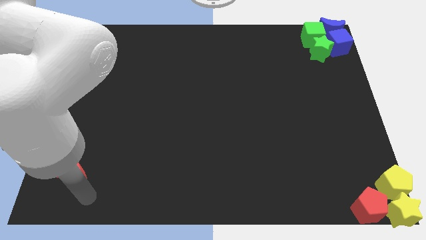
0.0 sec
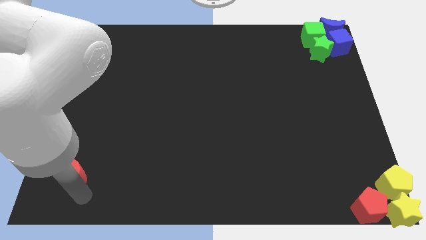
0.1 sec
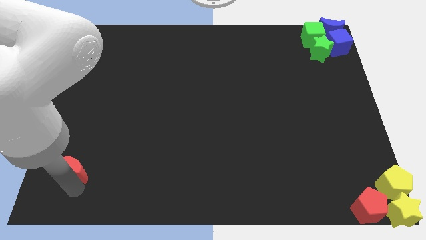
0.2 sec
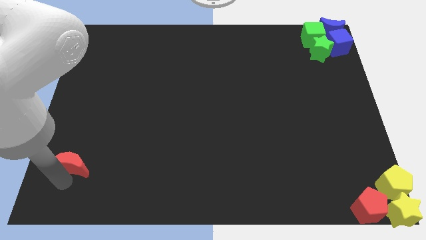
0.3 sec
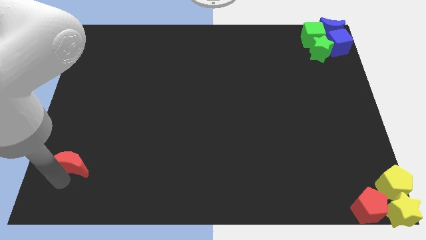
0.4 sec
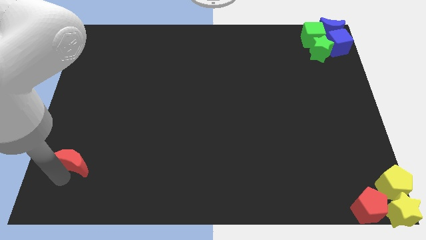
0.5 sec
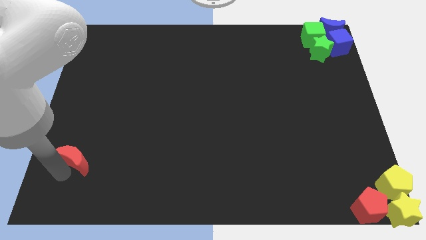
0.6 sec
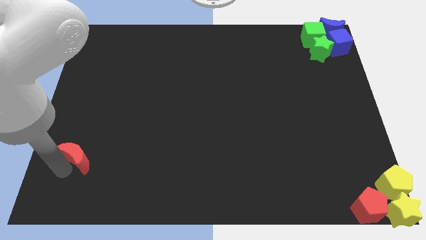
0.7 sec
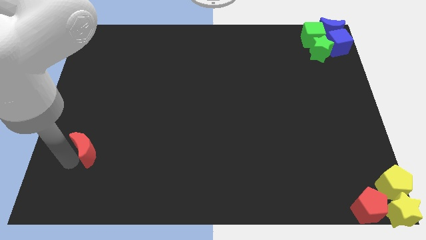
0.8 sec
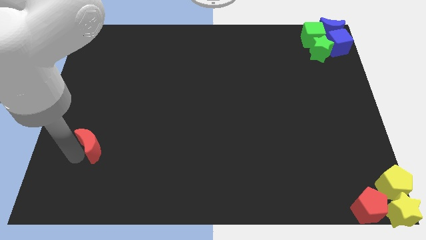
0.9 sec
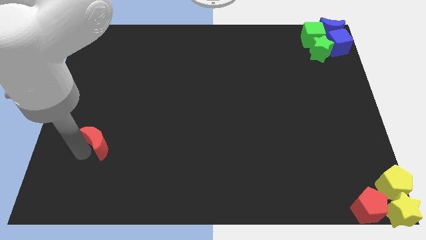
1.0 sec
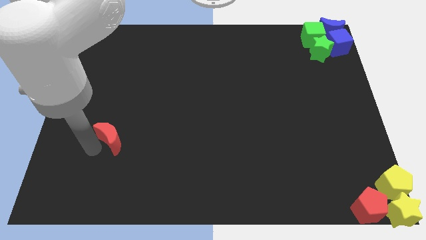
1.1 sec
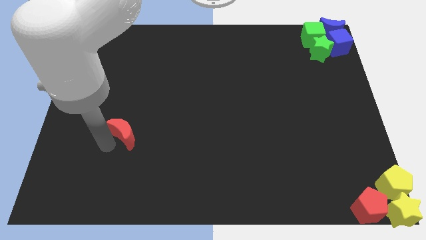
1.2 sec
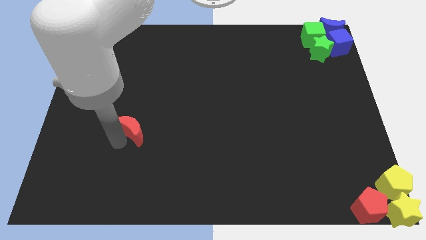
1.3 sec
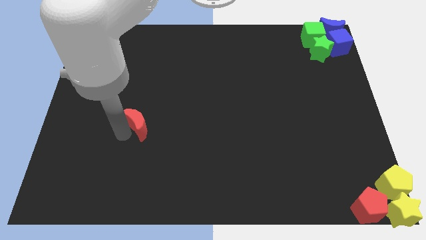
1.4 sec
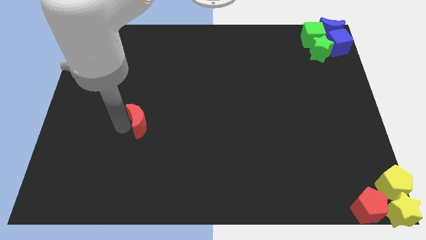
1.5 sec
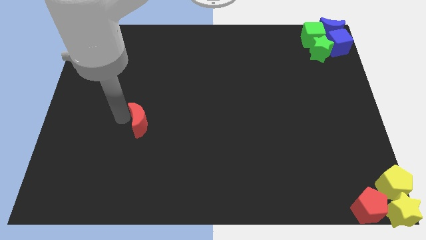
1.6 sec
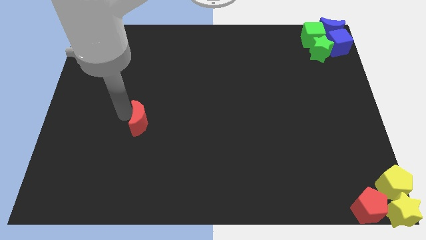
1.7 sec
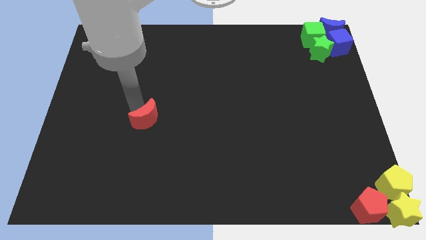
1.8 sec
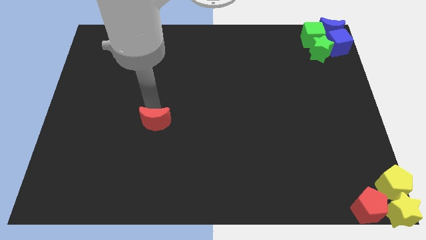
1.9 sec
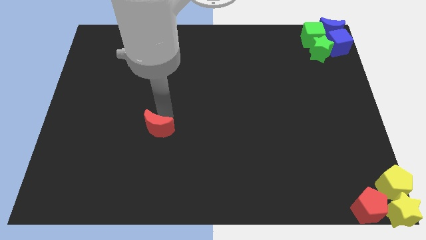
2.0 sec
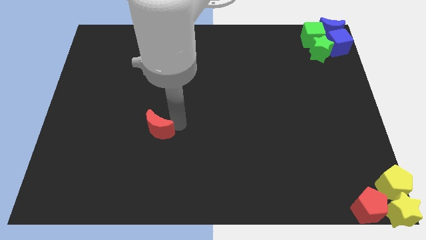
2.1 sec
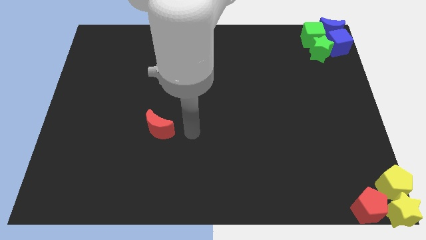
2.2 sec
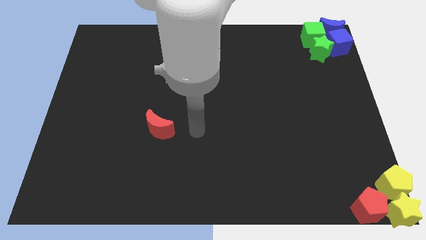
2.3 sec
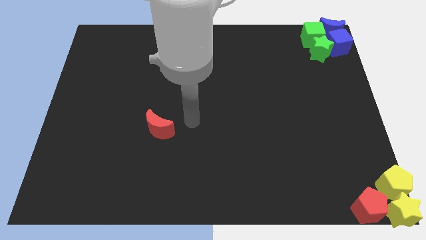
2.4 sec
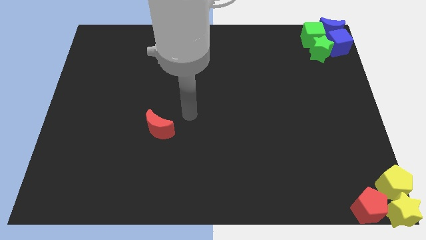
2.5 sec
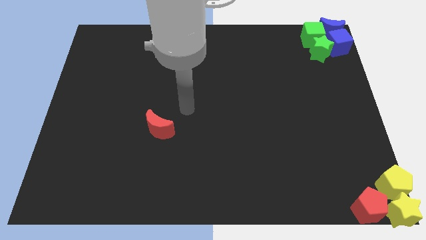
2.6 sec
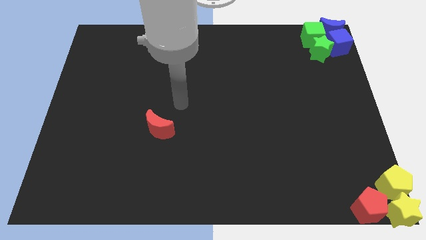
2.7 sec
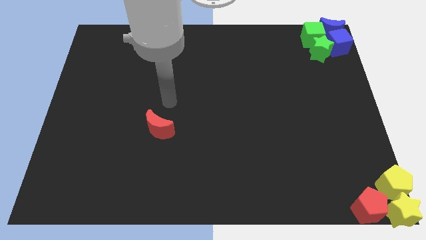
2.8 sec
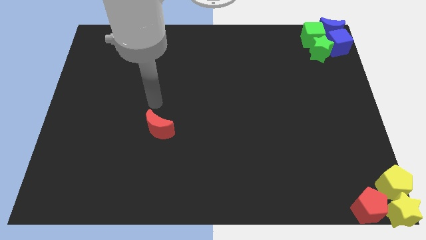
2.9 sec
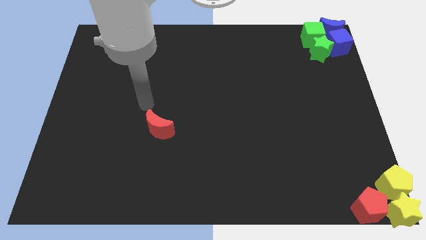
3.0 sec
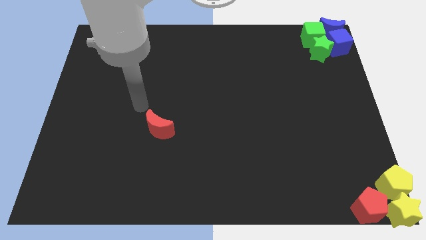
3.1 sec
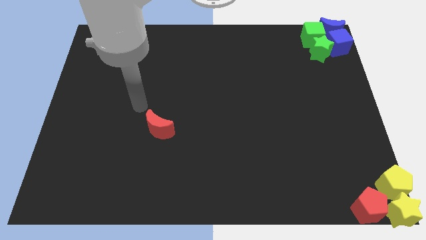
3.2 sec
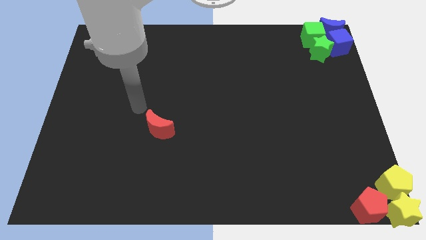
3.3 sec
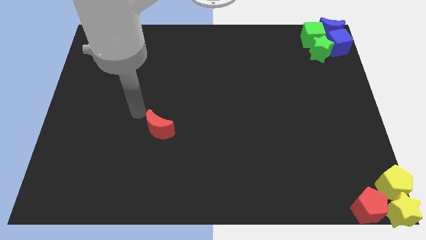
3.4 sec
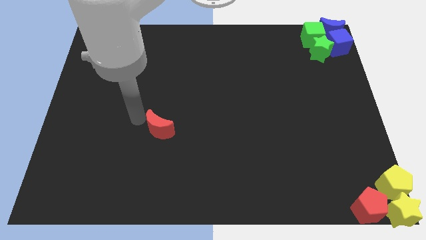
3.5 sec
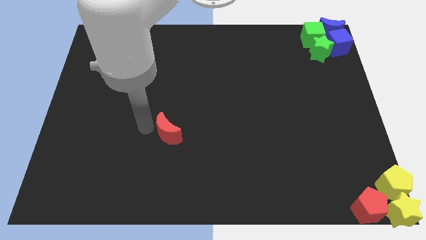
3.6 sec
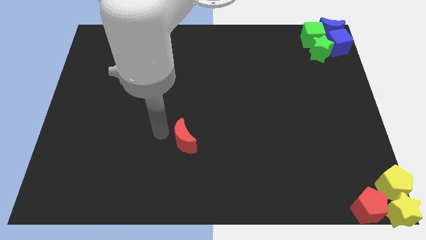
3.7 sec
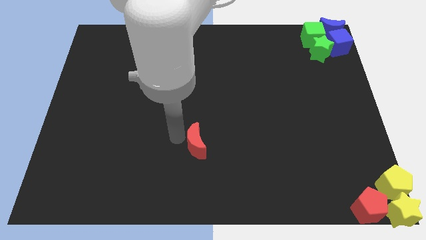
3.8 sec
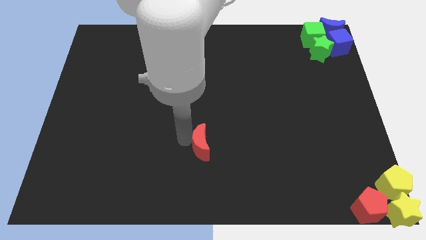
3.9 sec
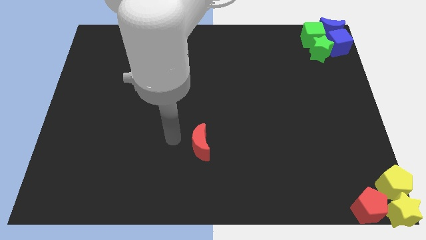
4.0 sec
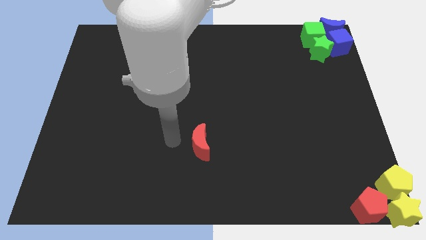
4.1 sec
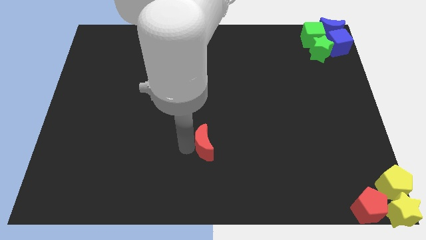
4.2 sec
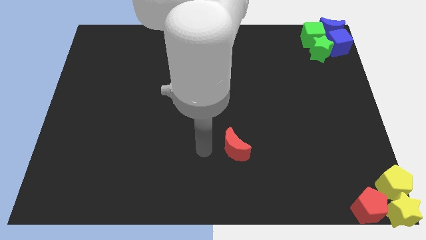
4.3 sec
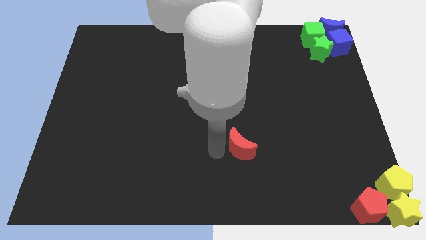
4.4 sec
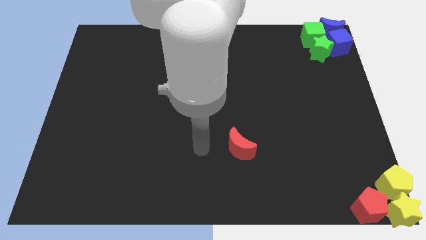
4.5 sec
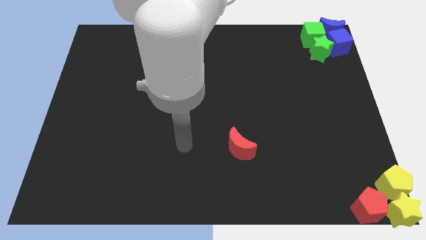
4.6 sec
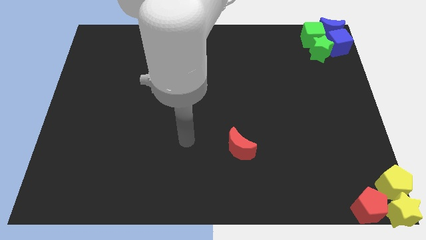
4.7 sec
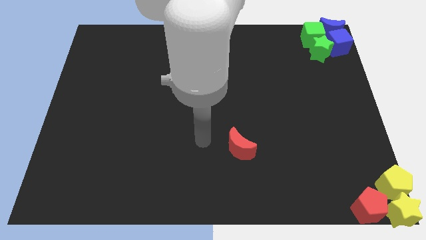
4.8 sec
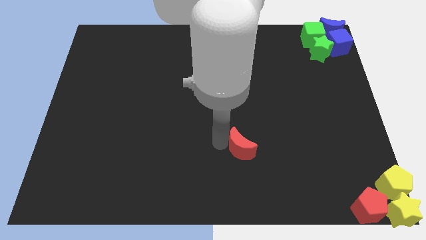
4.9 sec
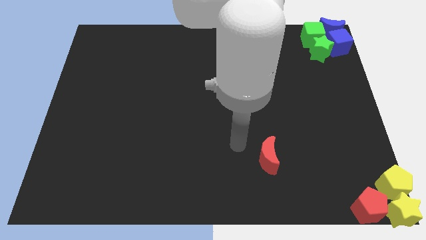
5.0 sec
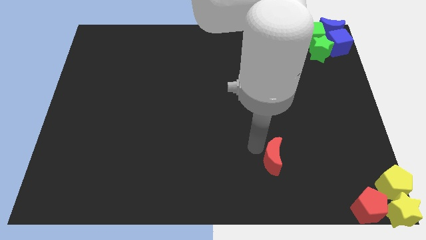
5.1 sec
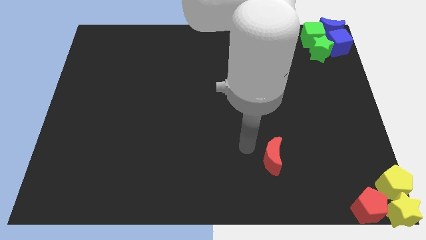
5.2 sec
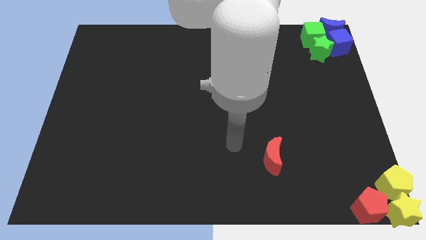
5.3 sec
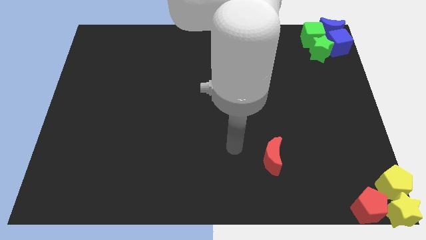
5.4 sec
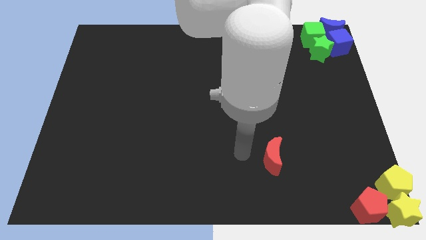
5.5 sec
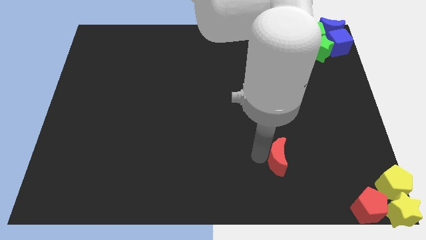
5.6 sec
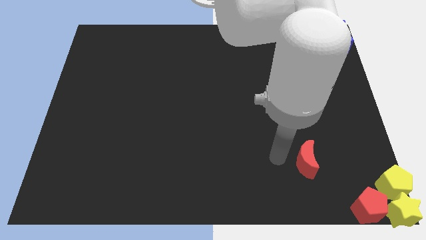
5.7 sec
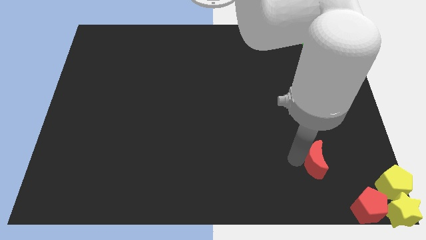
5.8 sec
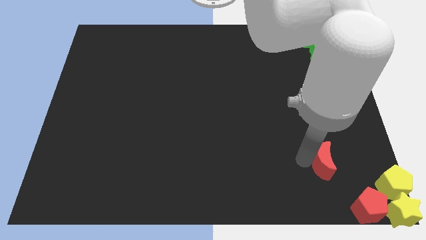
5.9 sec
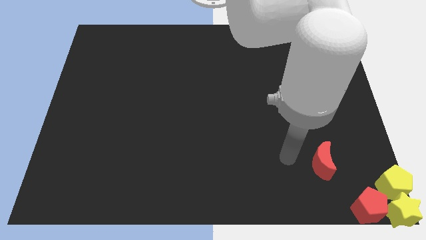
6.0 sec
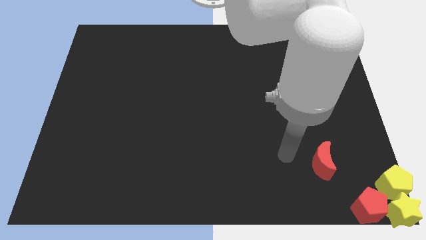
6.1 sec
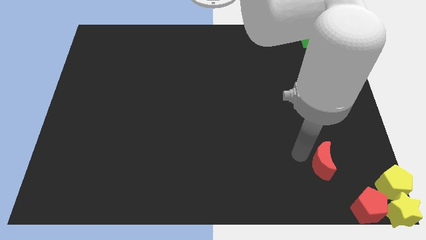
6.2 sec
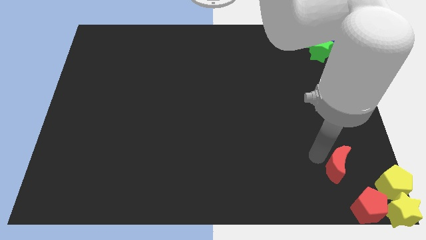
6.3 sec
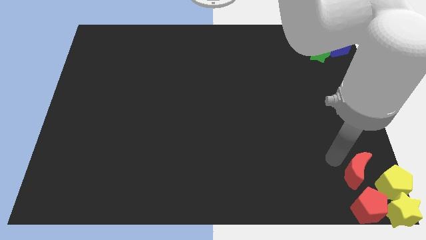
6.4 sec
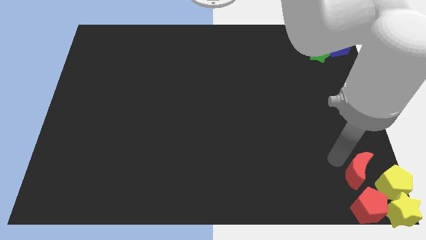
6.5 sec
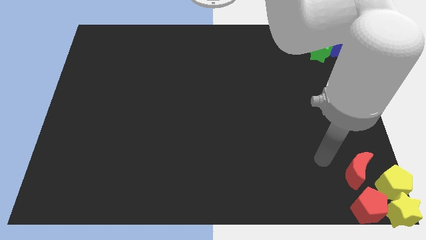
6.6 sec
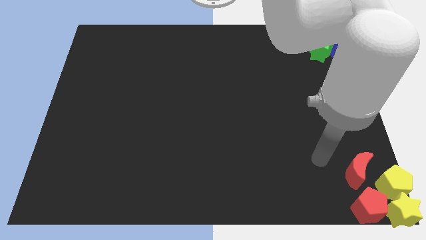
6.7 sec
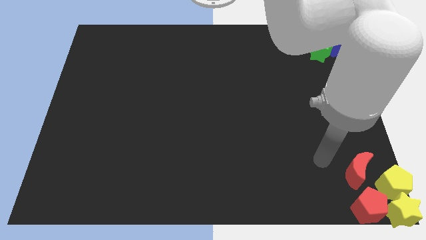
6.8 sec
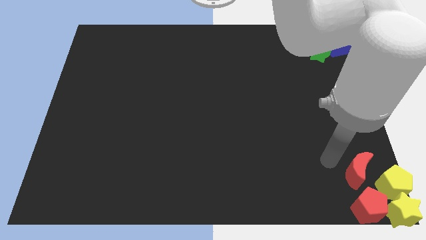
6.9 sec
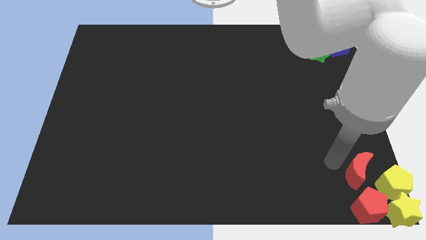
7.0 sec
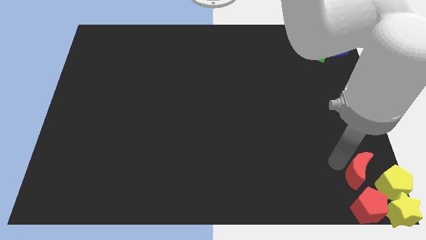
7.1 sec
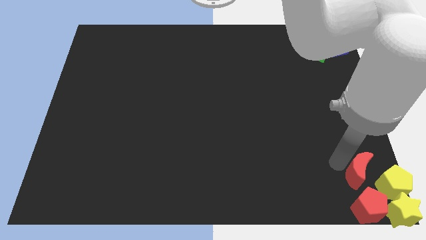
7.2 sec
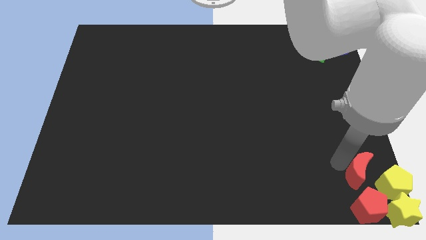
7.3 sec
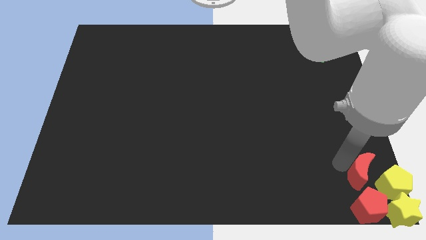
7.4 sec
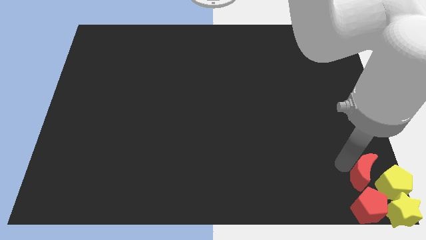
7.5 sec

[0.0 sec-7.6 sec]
place the red moon at the top of the red pentagon

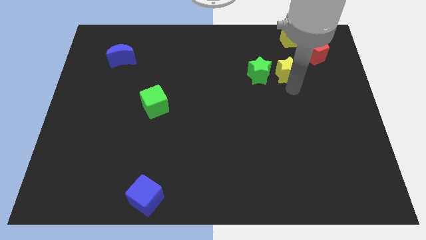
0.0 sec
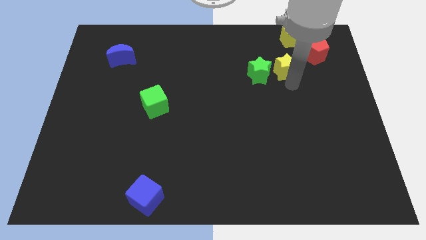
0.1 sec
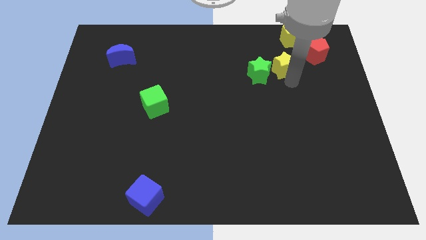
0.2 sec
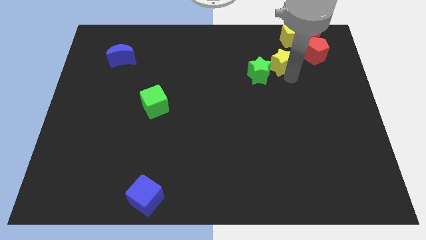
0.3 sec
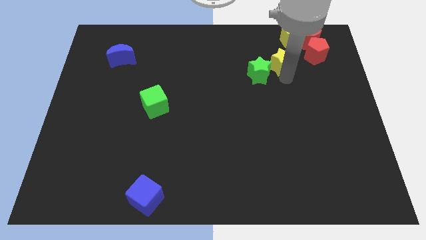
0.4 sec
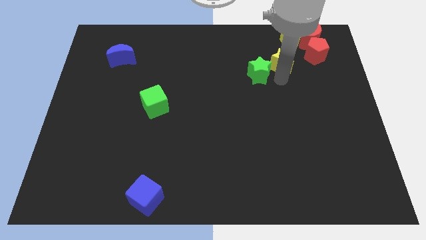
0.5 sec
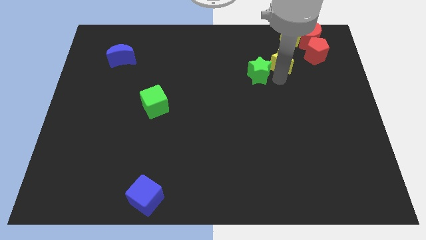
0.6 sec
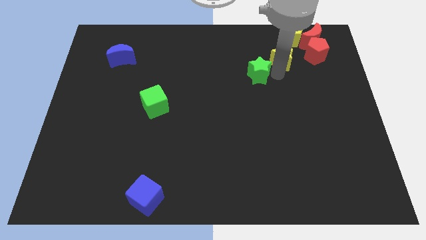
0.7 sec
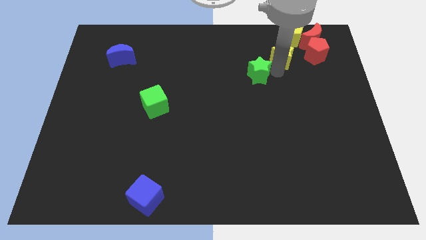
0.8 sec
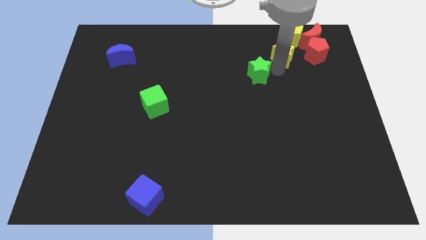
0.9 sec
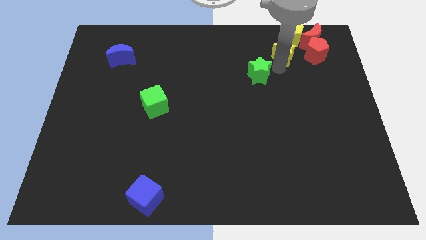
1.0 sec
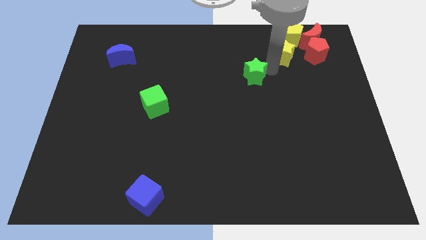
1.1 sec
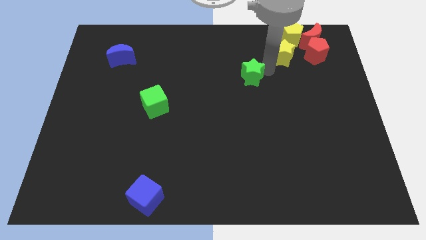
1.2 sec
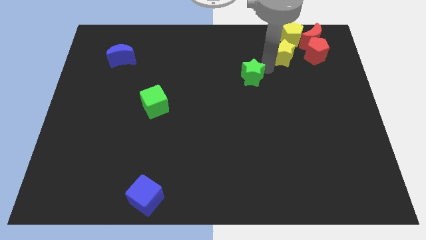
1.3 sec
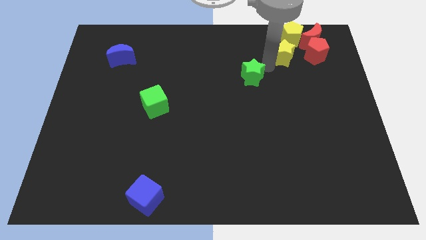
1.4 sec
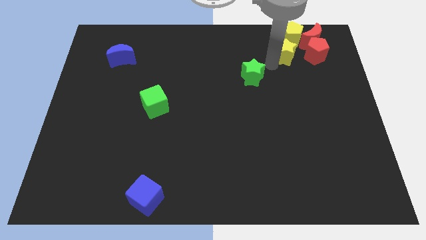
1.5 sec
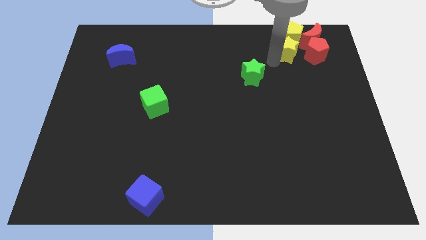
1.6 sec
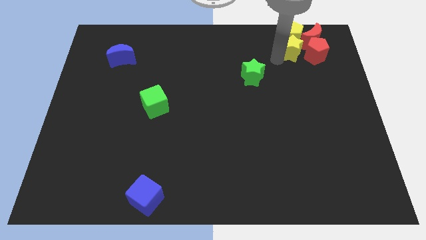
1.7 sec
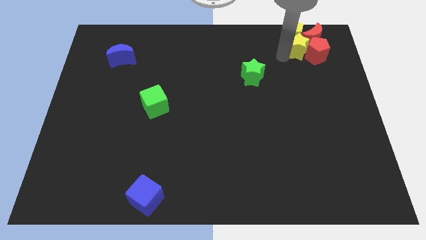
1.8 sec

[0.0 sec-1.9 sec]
place yellow star below yellow pentagon
